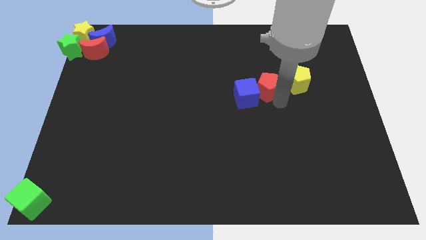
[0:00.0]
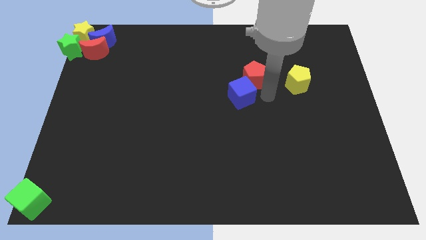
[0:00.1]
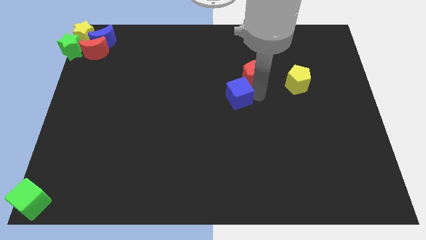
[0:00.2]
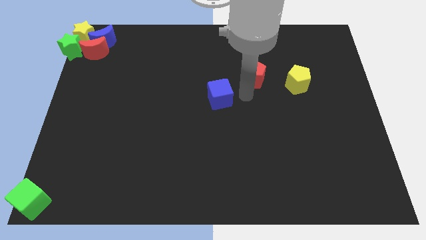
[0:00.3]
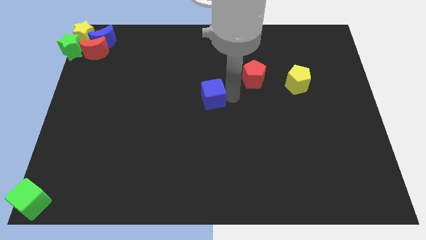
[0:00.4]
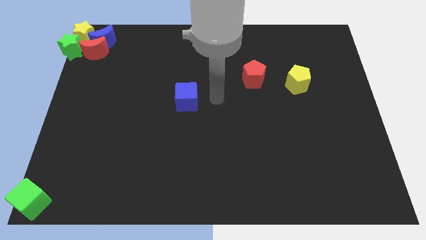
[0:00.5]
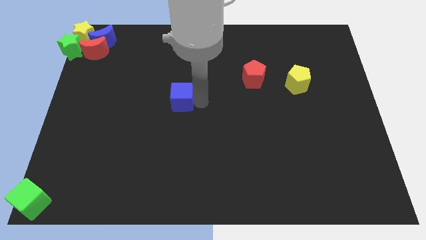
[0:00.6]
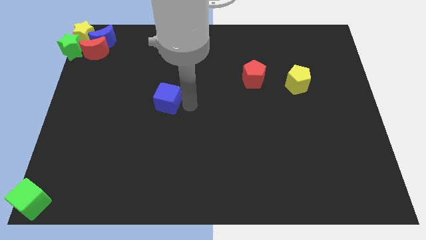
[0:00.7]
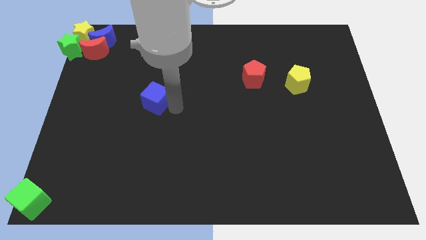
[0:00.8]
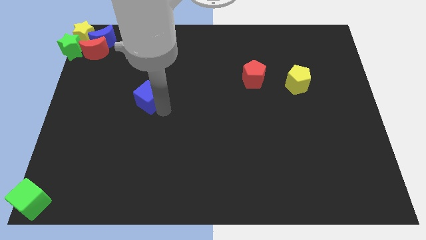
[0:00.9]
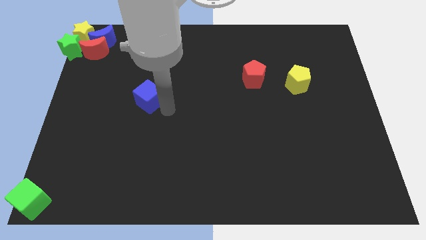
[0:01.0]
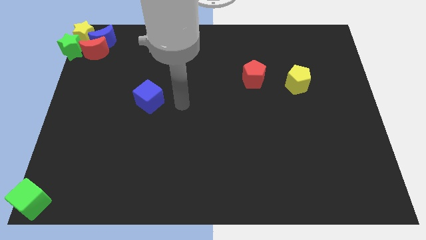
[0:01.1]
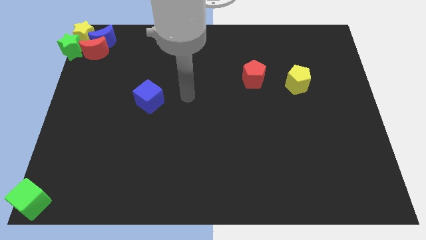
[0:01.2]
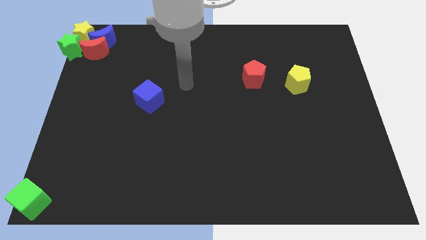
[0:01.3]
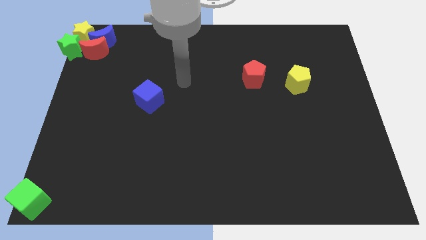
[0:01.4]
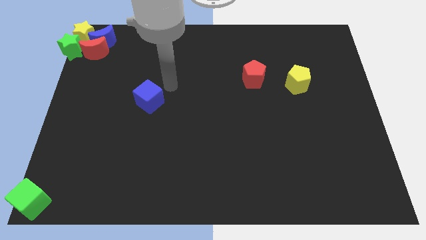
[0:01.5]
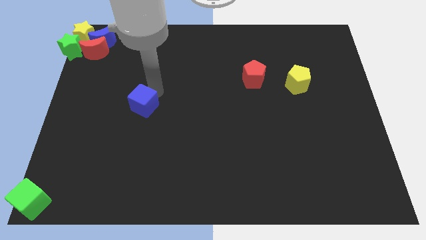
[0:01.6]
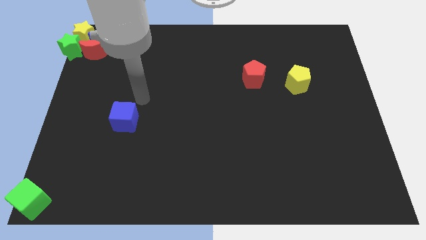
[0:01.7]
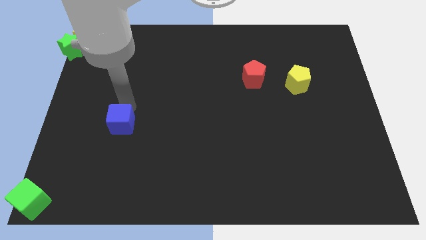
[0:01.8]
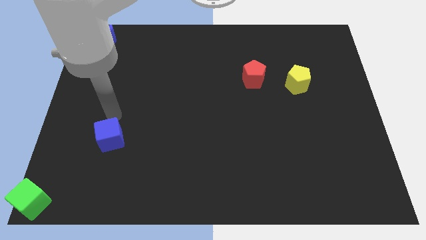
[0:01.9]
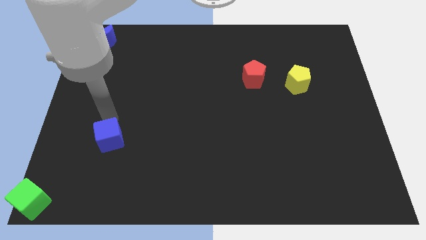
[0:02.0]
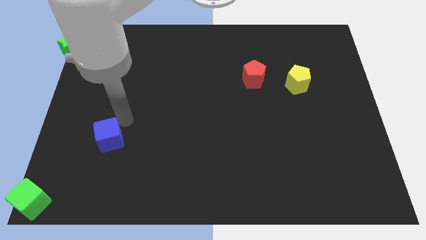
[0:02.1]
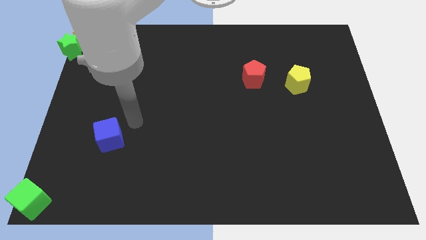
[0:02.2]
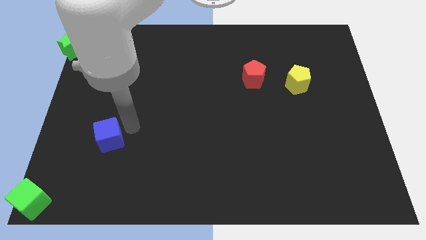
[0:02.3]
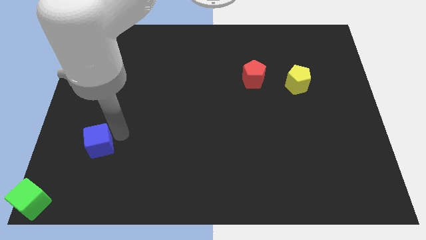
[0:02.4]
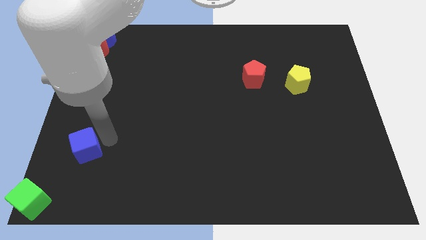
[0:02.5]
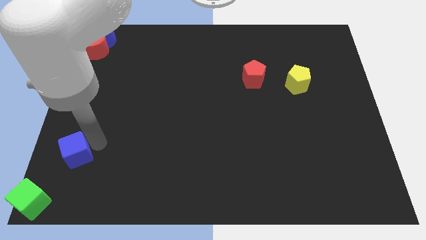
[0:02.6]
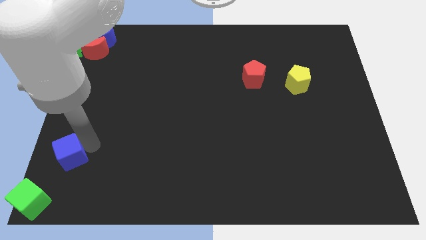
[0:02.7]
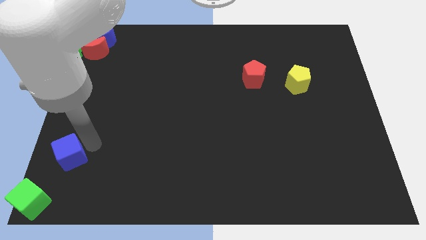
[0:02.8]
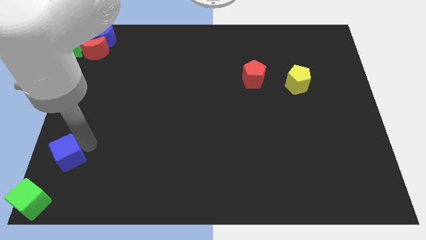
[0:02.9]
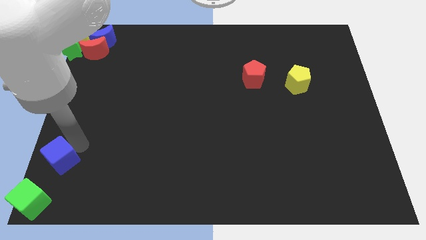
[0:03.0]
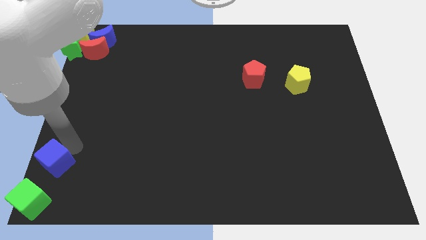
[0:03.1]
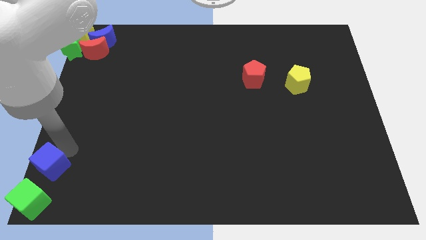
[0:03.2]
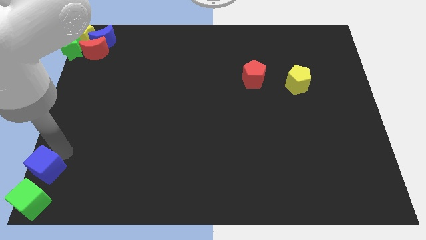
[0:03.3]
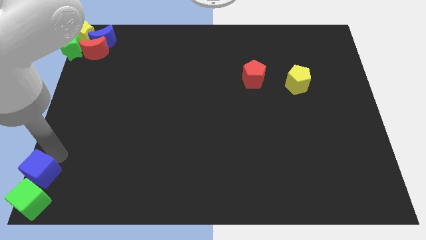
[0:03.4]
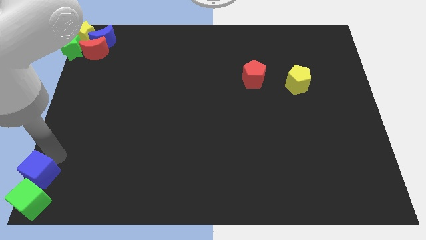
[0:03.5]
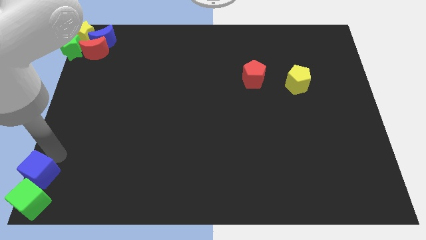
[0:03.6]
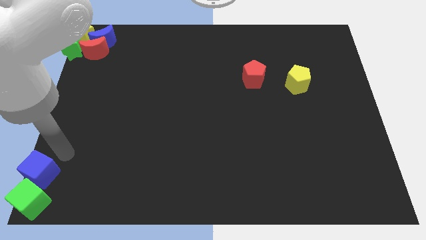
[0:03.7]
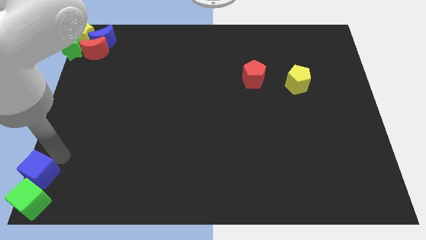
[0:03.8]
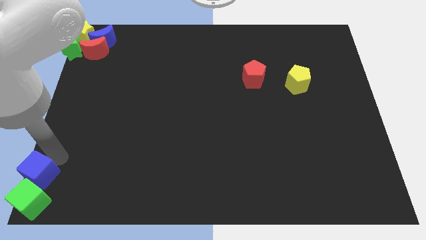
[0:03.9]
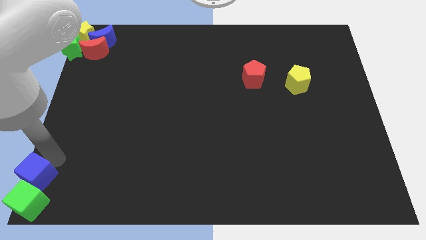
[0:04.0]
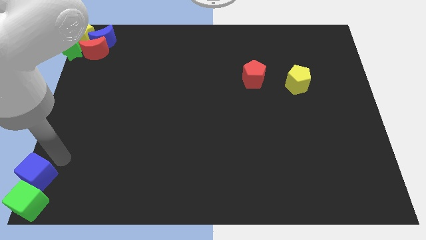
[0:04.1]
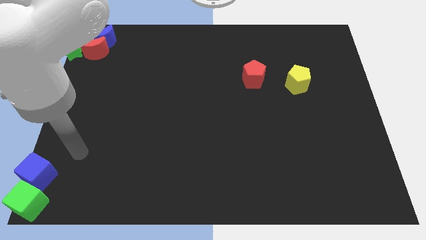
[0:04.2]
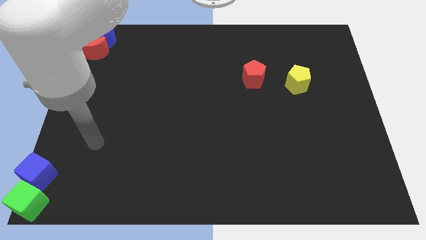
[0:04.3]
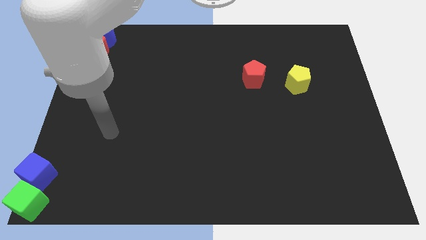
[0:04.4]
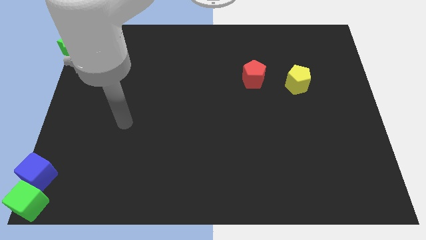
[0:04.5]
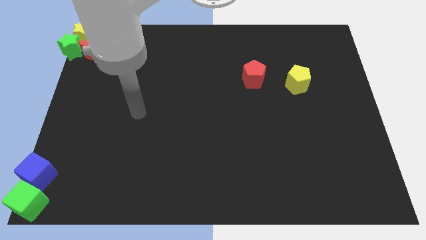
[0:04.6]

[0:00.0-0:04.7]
push the blue cube into the green cube

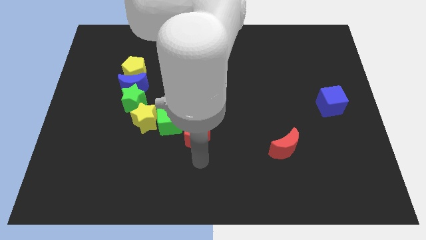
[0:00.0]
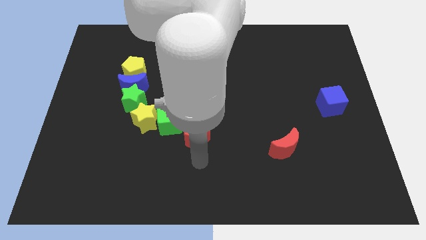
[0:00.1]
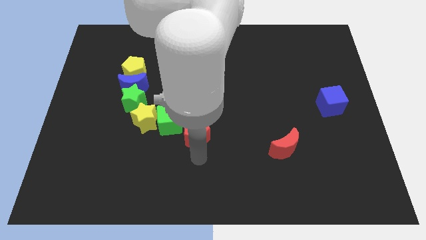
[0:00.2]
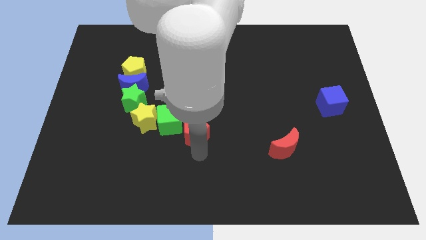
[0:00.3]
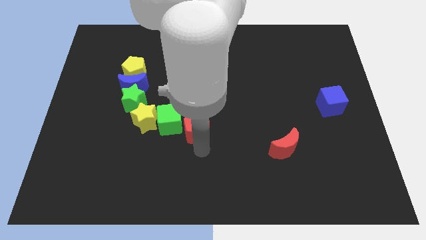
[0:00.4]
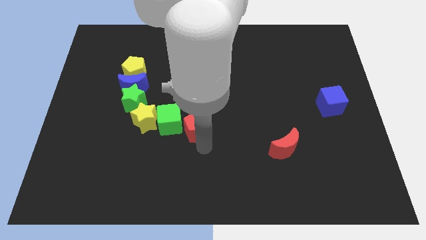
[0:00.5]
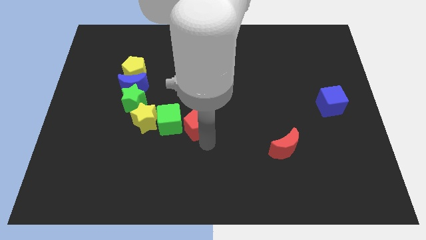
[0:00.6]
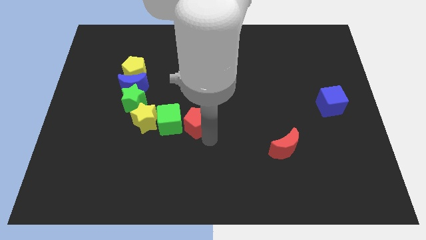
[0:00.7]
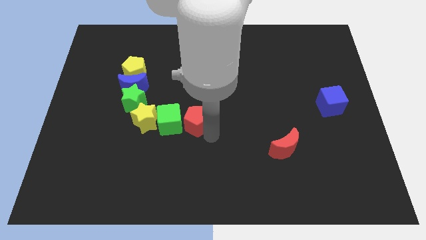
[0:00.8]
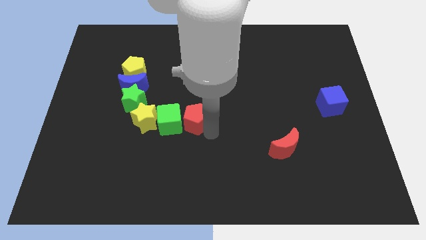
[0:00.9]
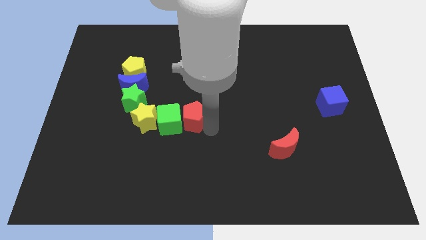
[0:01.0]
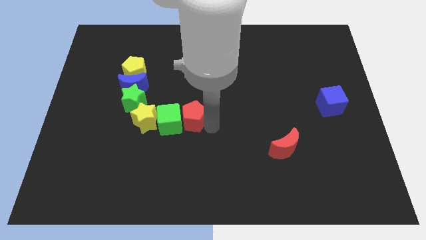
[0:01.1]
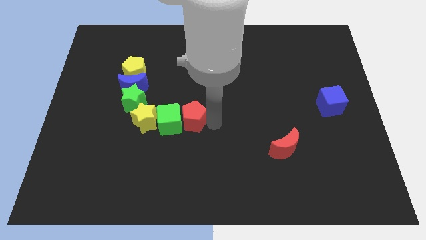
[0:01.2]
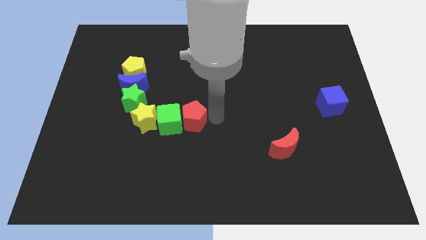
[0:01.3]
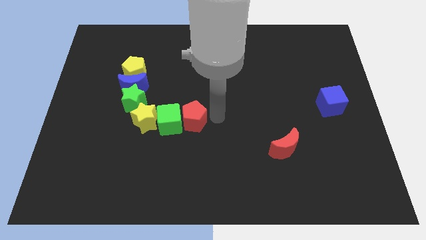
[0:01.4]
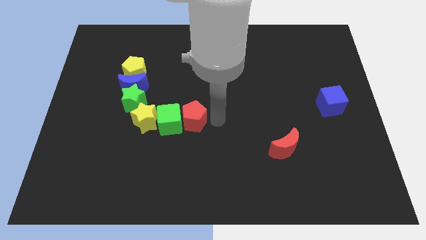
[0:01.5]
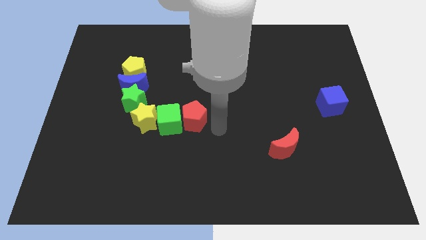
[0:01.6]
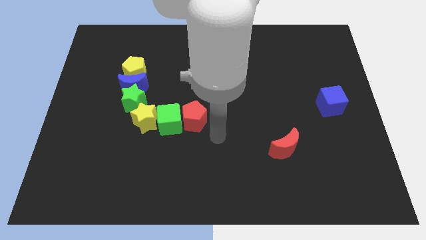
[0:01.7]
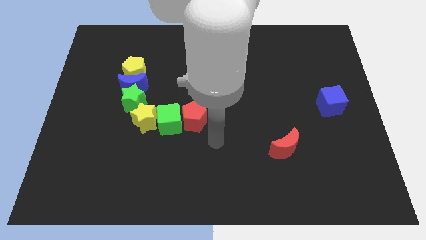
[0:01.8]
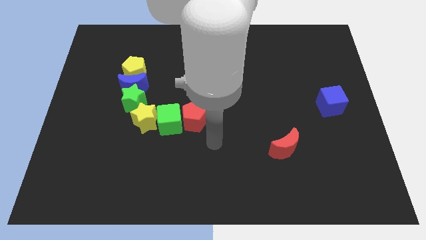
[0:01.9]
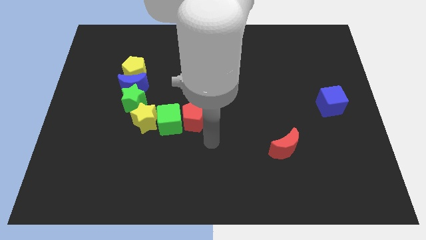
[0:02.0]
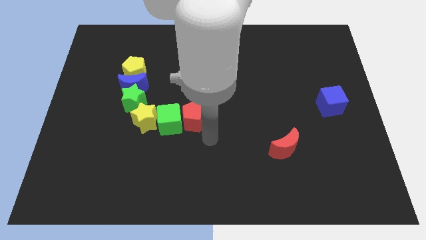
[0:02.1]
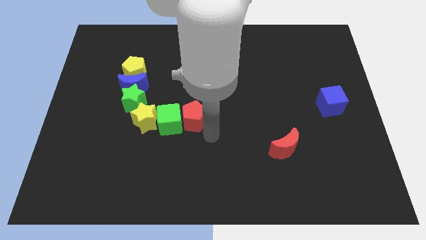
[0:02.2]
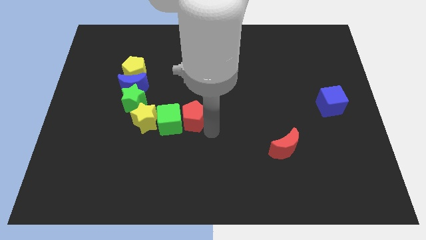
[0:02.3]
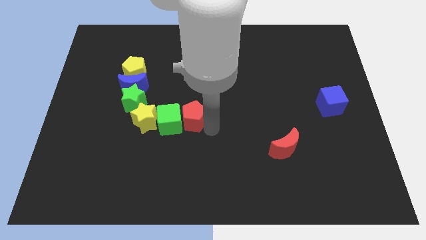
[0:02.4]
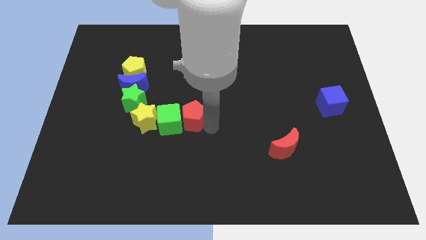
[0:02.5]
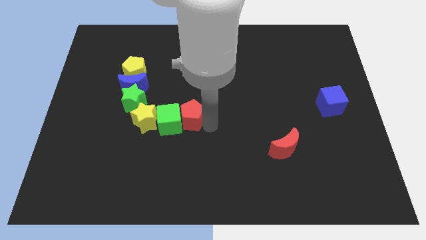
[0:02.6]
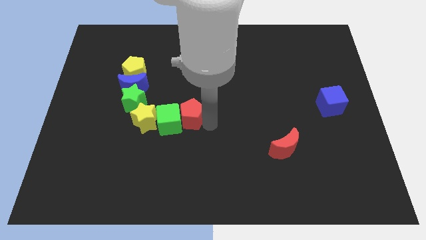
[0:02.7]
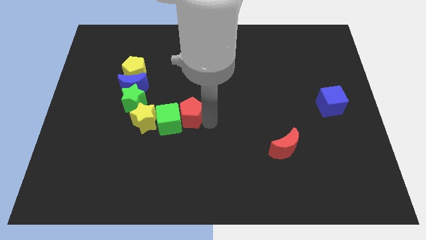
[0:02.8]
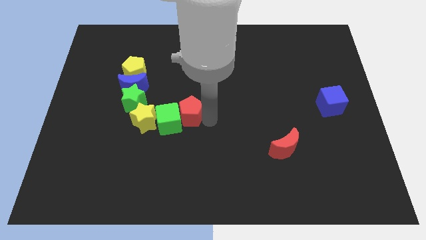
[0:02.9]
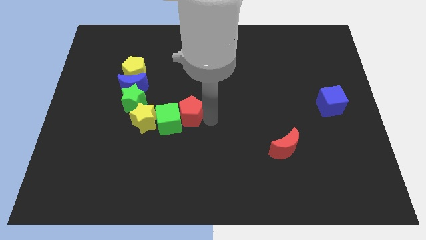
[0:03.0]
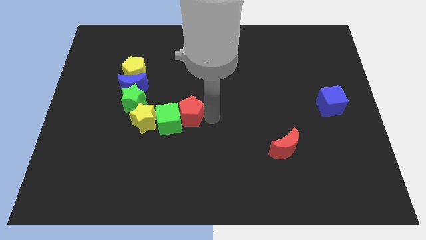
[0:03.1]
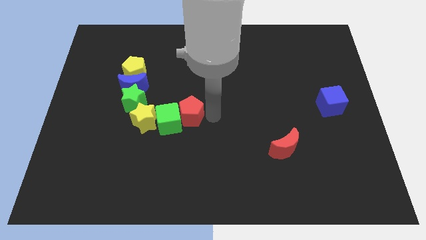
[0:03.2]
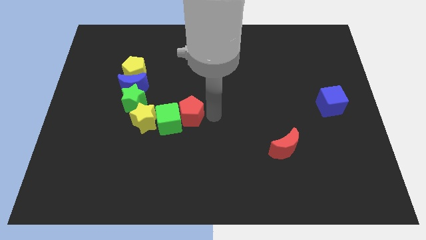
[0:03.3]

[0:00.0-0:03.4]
drag the red pentagon to the right of the green cube

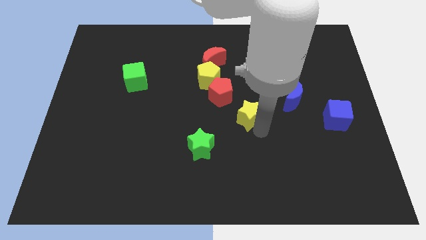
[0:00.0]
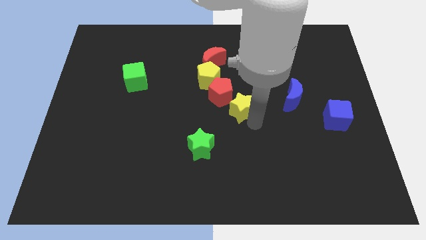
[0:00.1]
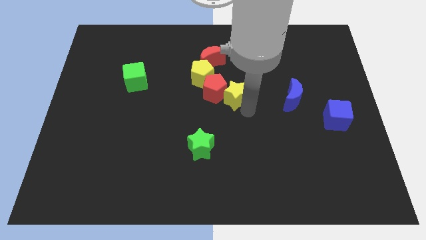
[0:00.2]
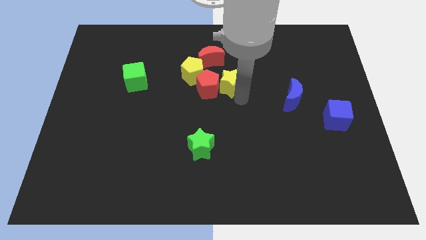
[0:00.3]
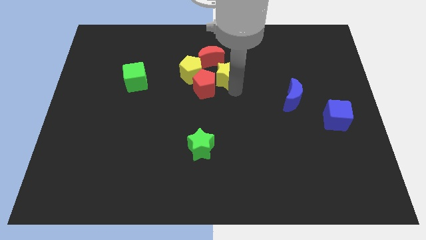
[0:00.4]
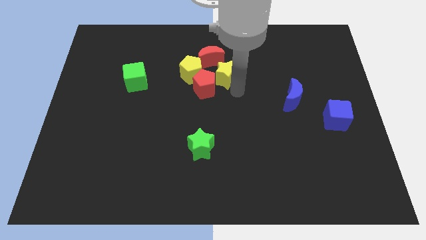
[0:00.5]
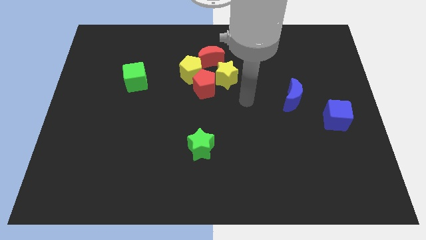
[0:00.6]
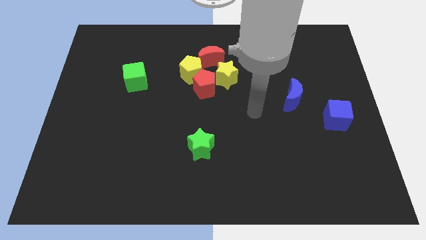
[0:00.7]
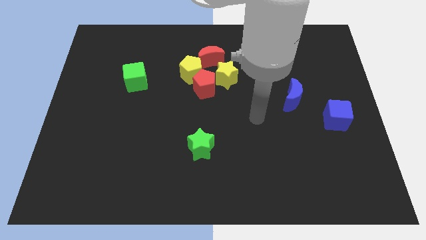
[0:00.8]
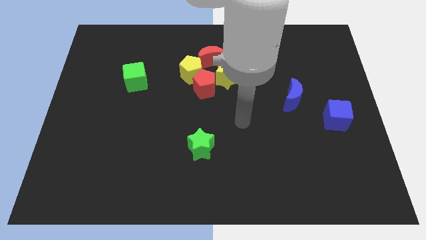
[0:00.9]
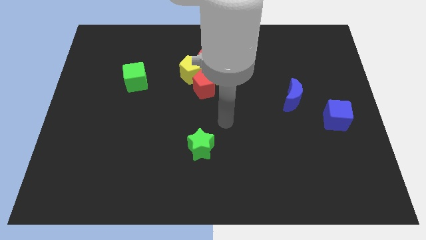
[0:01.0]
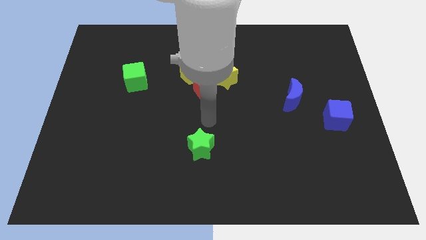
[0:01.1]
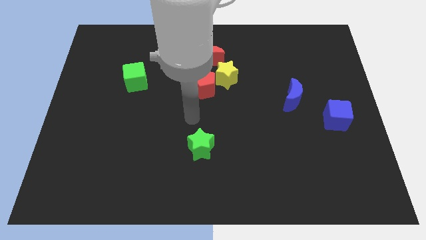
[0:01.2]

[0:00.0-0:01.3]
push the yellow star into the group of blocks
